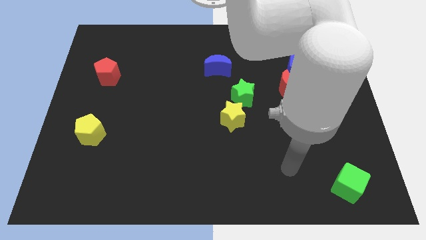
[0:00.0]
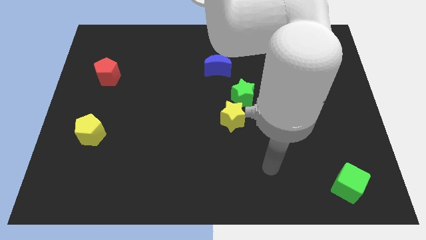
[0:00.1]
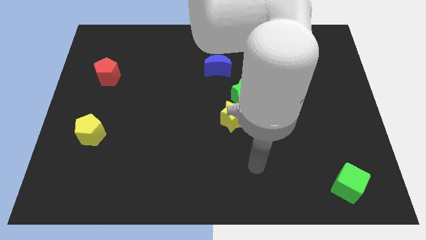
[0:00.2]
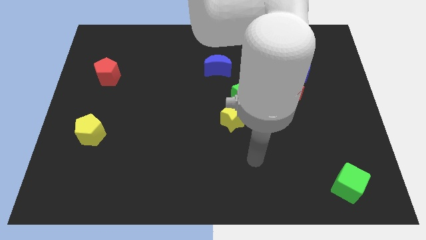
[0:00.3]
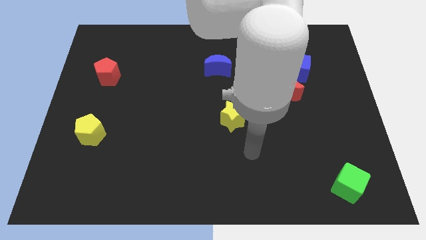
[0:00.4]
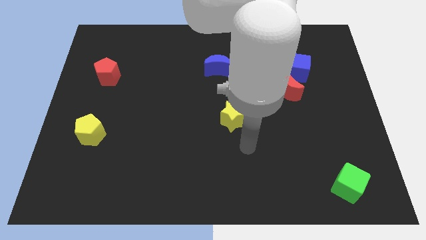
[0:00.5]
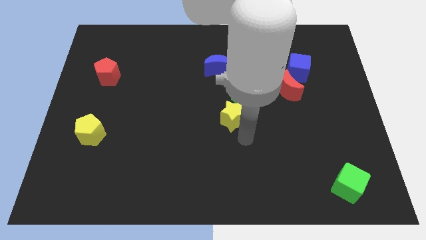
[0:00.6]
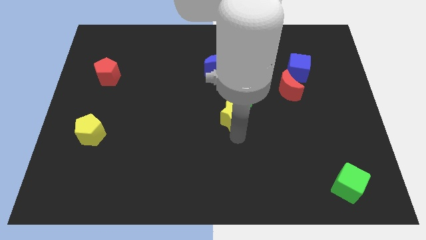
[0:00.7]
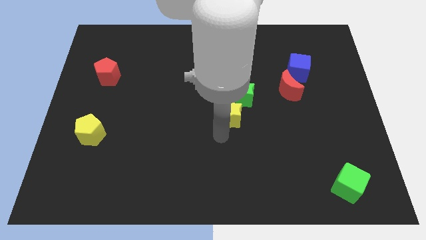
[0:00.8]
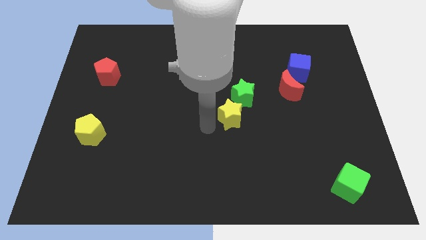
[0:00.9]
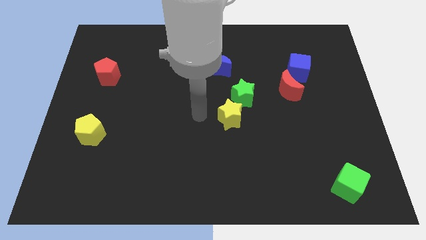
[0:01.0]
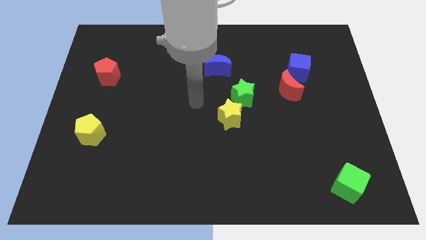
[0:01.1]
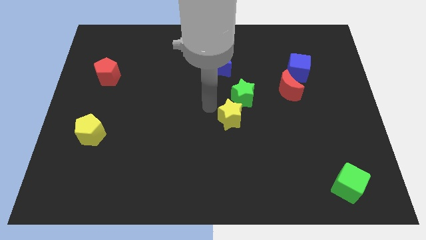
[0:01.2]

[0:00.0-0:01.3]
place your arm close to the yellow star

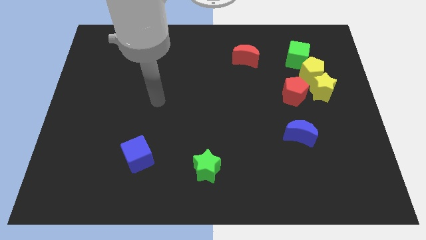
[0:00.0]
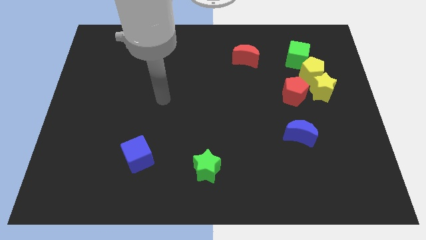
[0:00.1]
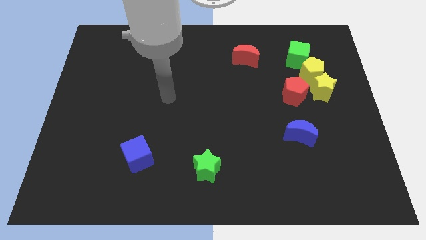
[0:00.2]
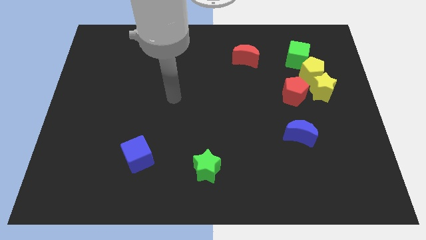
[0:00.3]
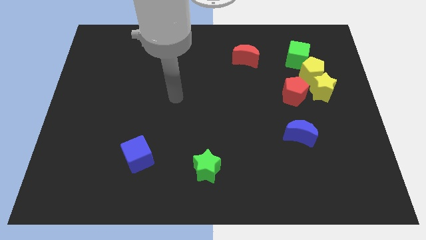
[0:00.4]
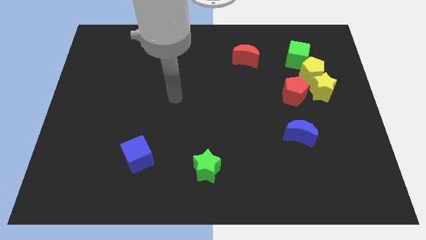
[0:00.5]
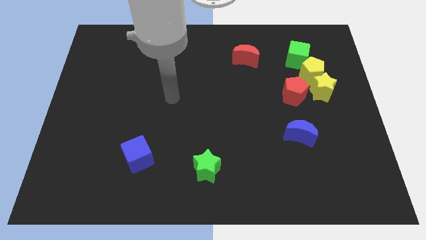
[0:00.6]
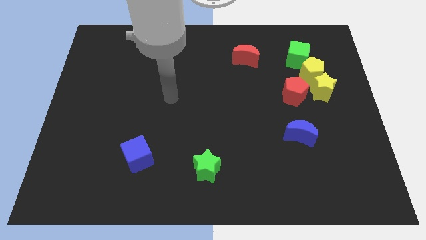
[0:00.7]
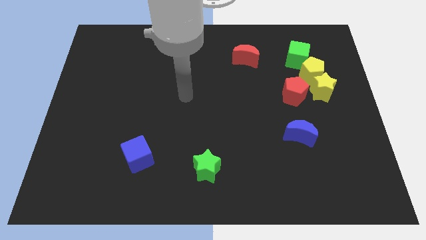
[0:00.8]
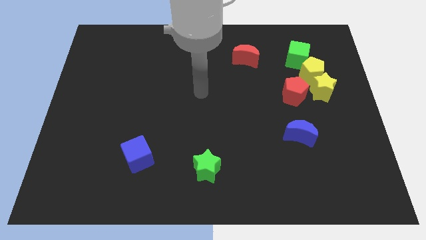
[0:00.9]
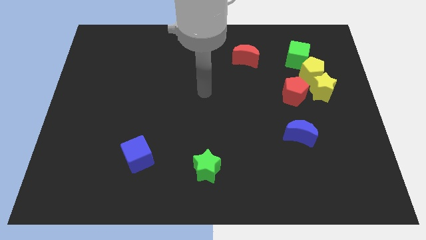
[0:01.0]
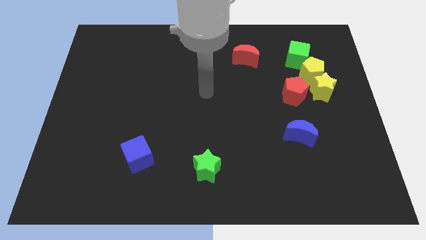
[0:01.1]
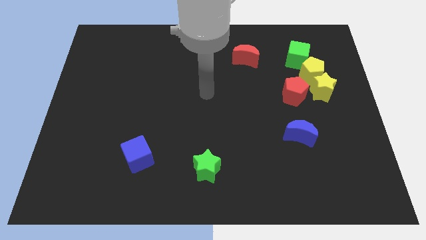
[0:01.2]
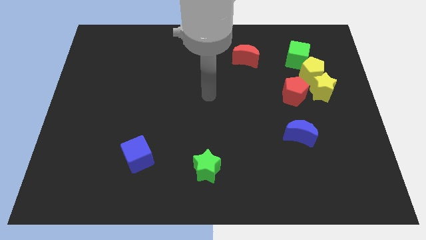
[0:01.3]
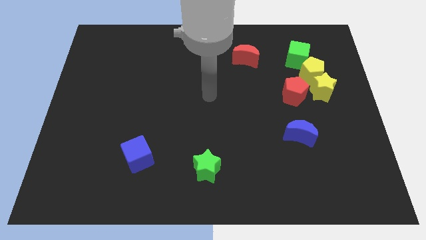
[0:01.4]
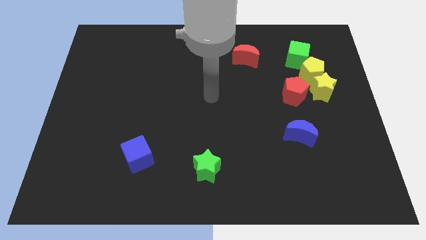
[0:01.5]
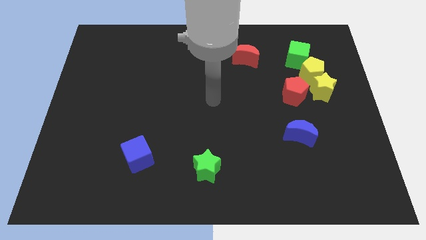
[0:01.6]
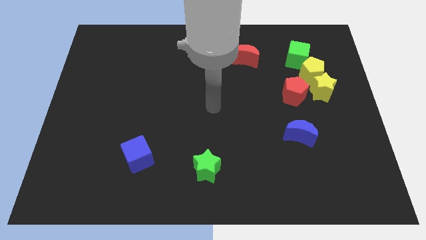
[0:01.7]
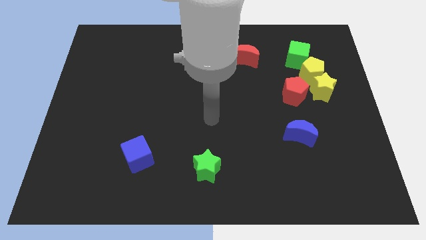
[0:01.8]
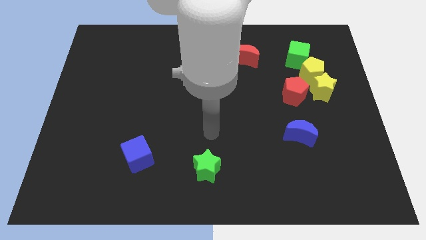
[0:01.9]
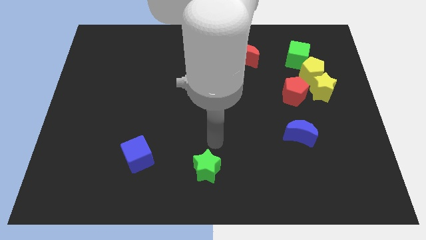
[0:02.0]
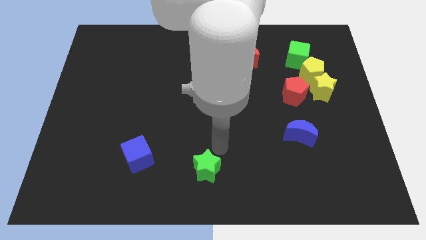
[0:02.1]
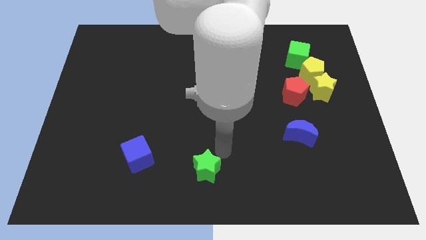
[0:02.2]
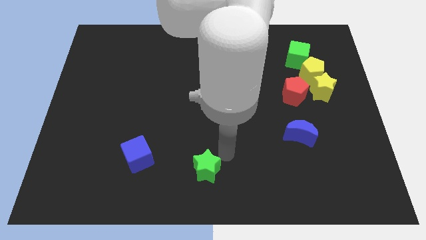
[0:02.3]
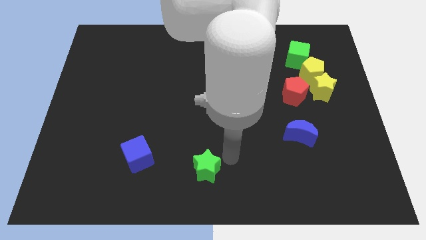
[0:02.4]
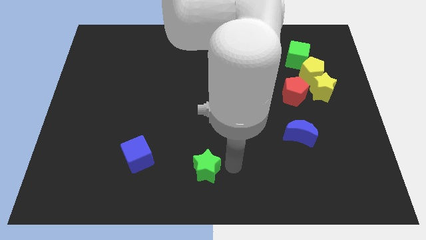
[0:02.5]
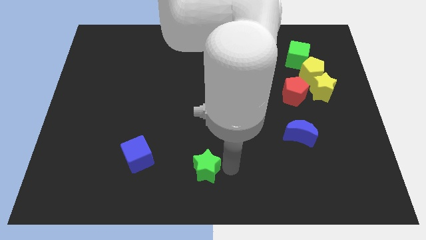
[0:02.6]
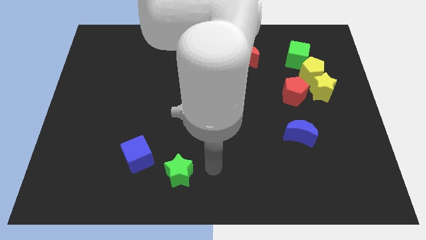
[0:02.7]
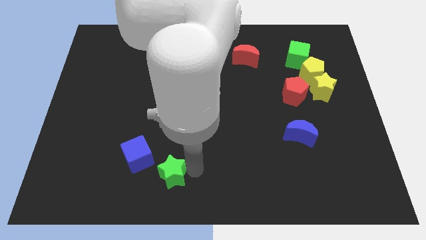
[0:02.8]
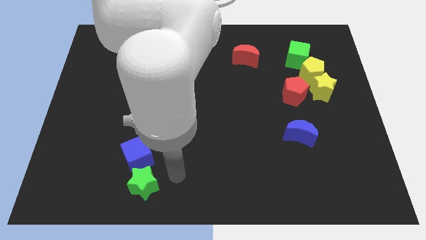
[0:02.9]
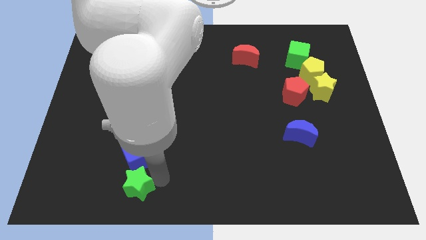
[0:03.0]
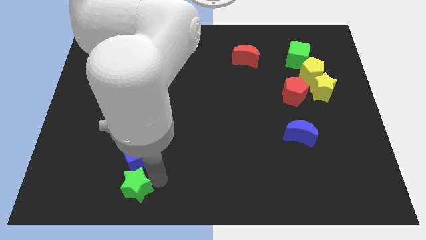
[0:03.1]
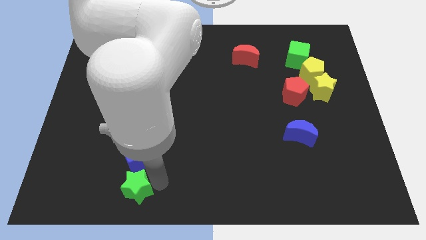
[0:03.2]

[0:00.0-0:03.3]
place green star below blue cube

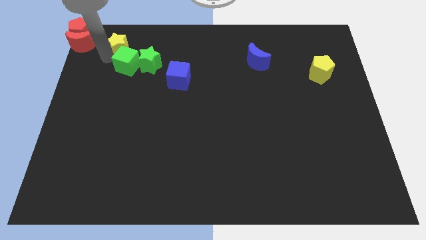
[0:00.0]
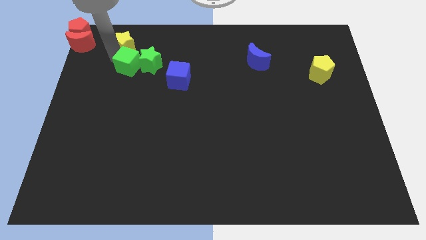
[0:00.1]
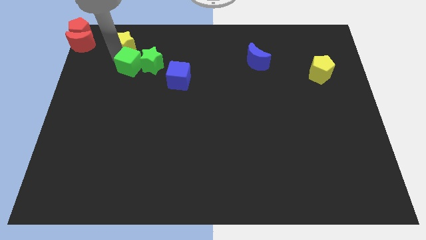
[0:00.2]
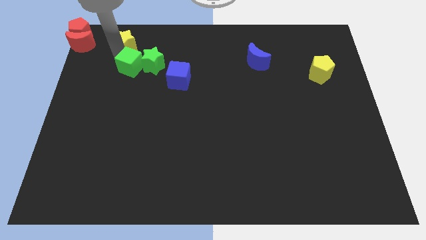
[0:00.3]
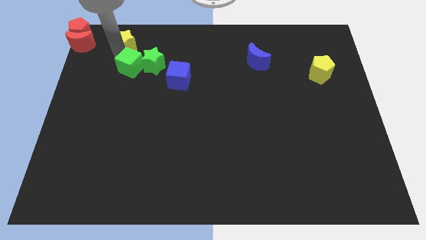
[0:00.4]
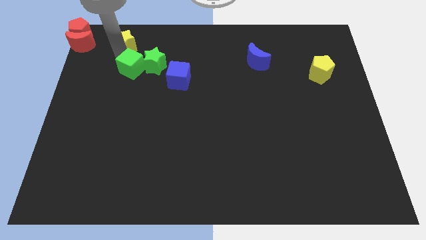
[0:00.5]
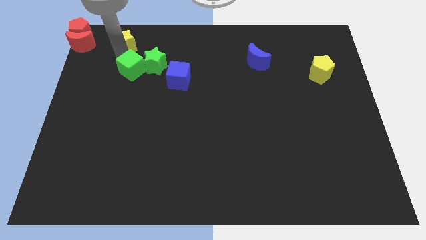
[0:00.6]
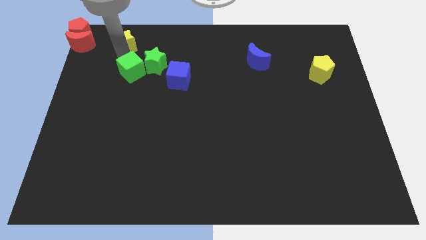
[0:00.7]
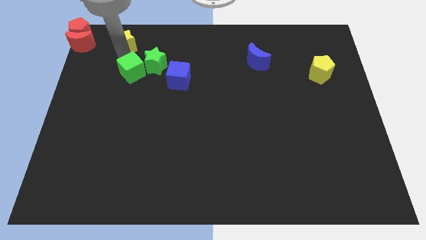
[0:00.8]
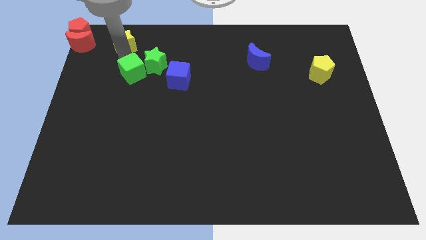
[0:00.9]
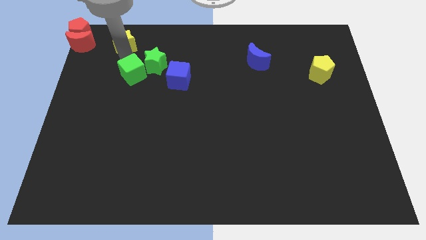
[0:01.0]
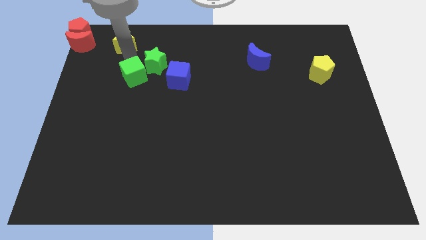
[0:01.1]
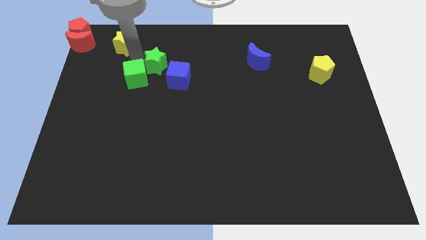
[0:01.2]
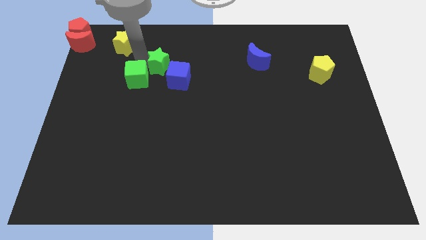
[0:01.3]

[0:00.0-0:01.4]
move the green cube to the bottom left of the green star

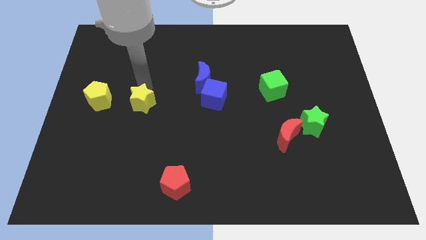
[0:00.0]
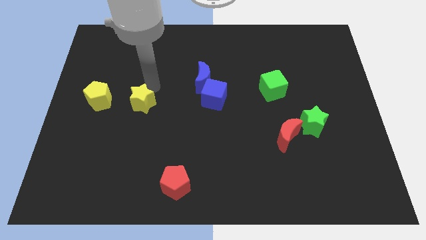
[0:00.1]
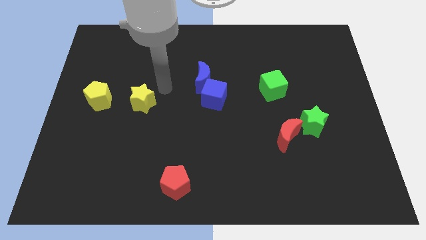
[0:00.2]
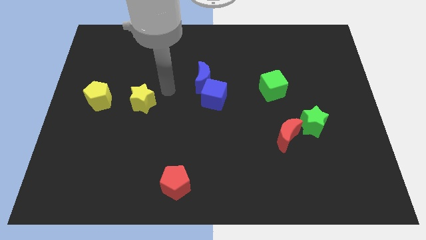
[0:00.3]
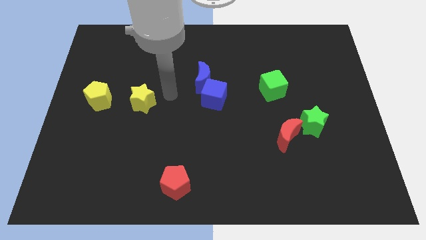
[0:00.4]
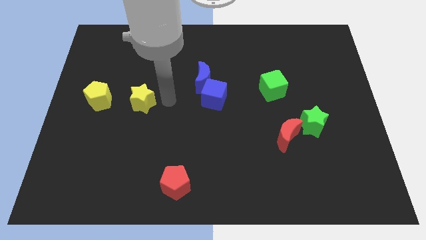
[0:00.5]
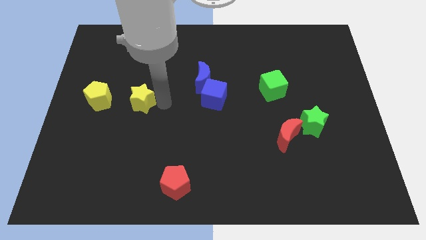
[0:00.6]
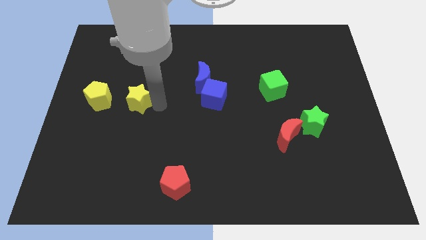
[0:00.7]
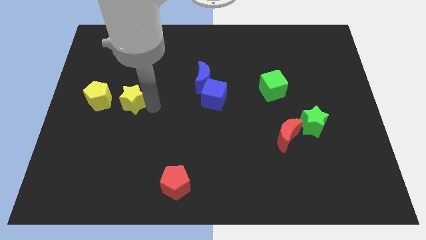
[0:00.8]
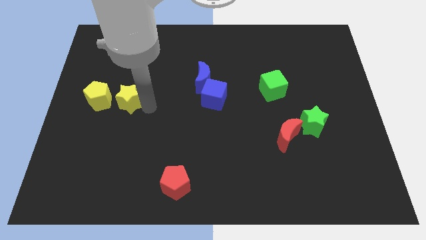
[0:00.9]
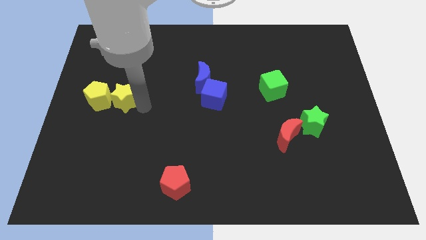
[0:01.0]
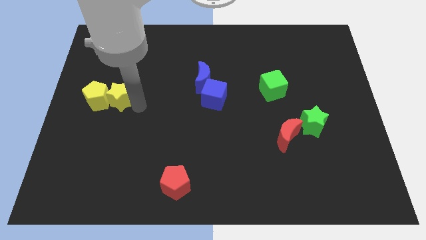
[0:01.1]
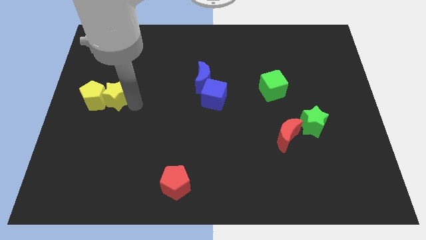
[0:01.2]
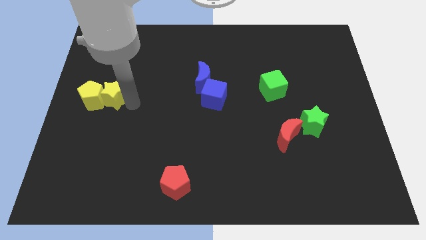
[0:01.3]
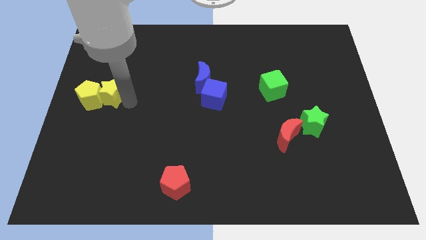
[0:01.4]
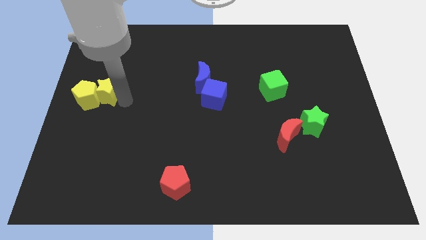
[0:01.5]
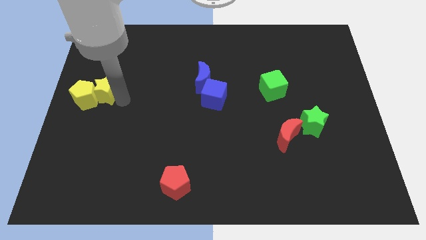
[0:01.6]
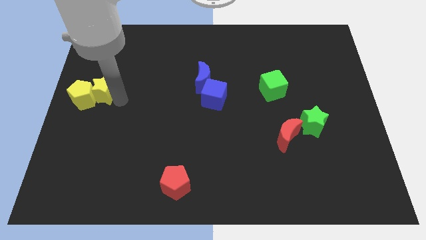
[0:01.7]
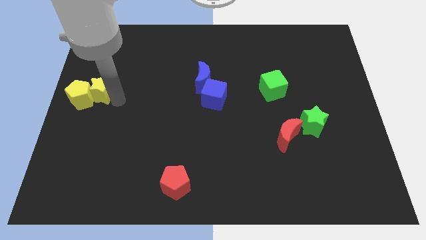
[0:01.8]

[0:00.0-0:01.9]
push the yellow star into the yellow pentagon

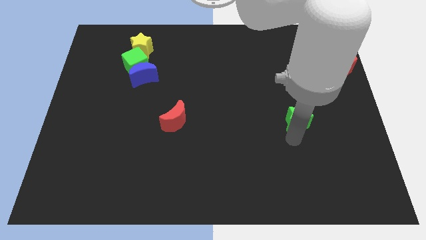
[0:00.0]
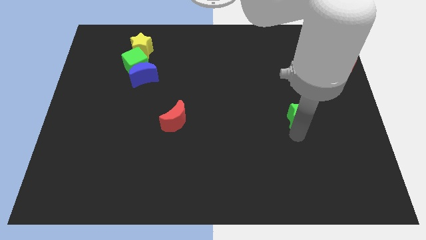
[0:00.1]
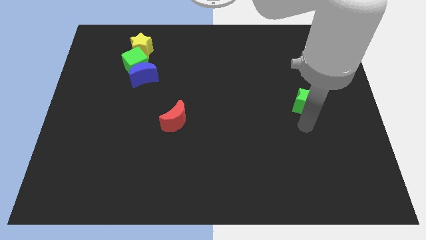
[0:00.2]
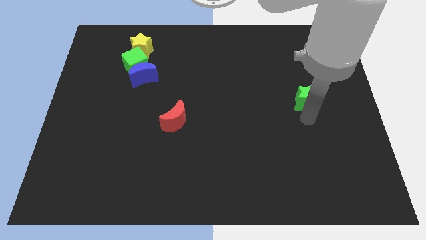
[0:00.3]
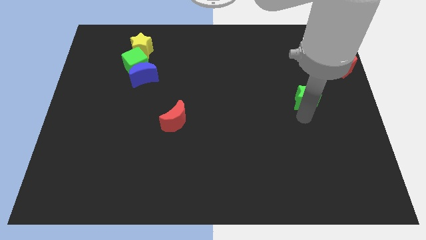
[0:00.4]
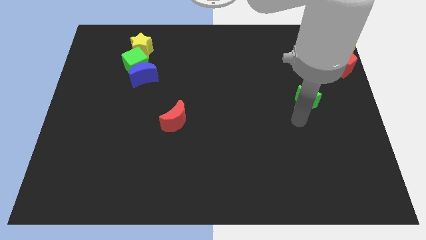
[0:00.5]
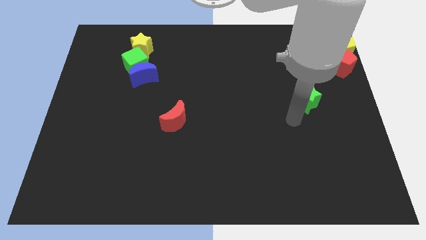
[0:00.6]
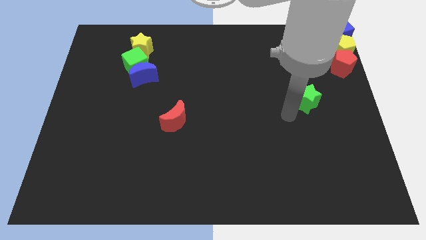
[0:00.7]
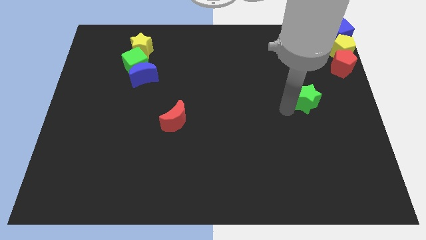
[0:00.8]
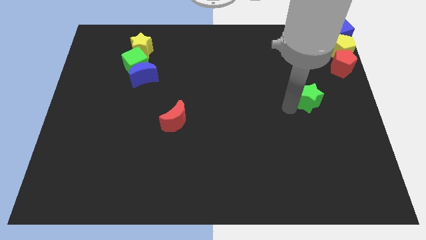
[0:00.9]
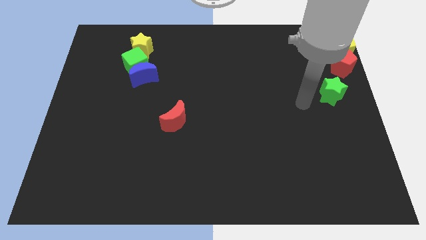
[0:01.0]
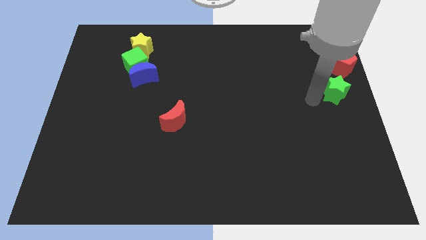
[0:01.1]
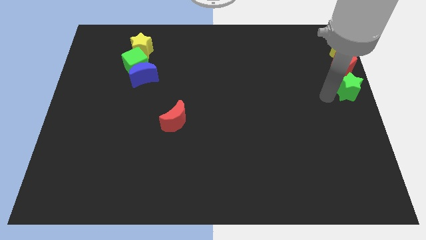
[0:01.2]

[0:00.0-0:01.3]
push the green star towards the bottom of the red pentagon
